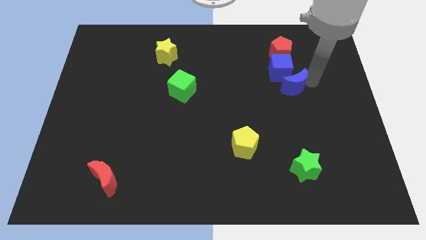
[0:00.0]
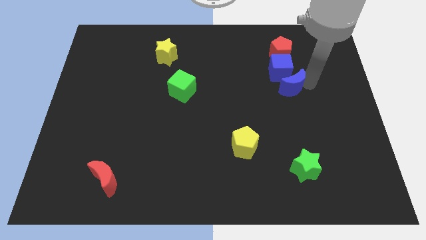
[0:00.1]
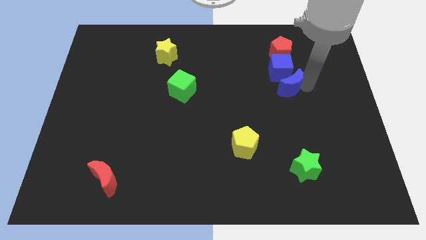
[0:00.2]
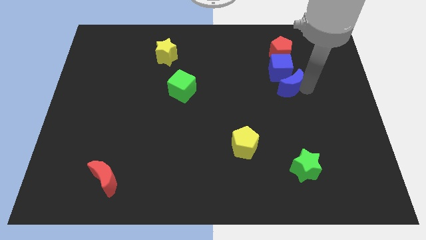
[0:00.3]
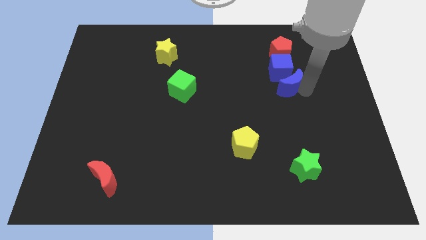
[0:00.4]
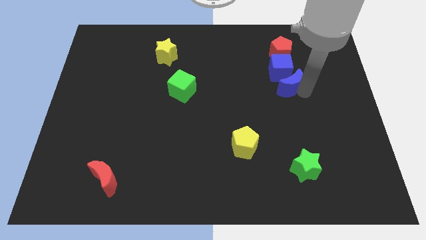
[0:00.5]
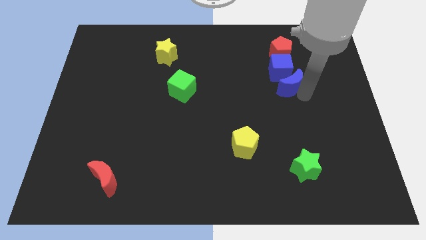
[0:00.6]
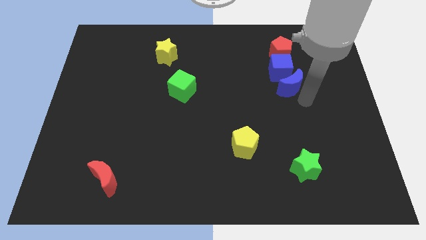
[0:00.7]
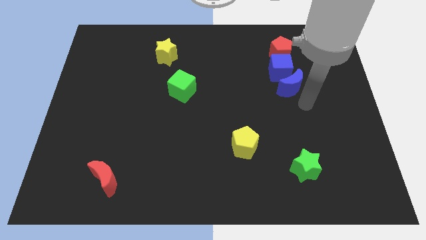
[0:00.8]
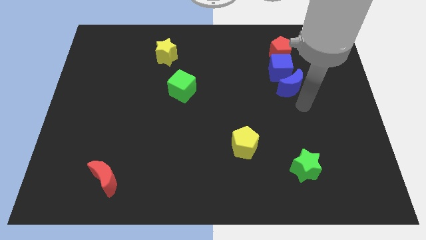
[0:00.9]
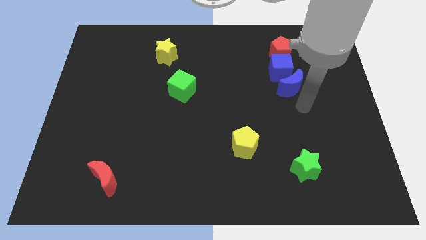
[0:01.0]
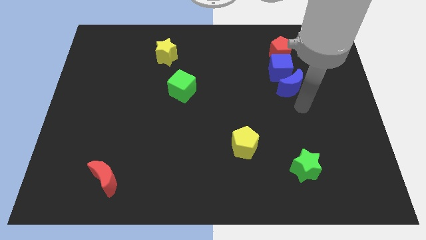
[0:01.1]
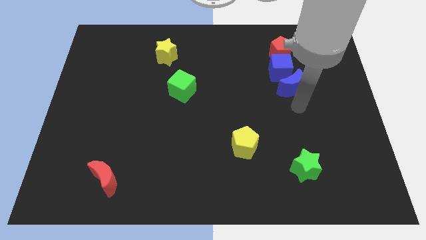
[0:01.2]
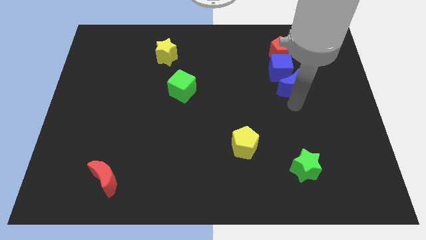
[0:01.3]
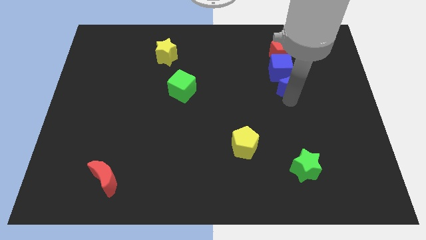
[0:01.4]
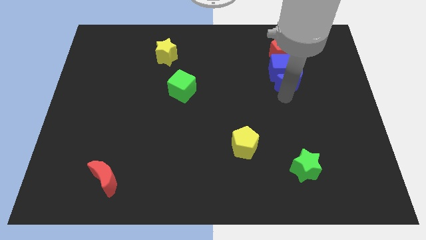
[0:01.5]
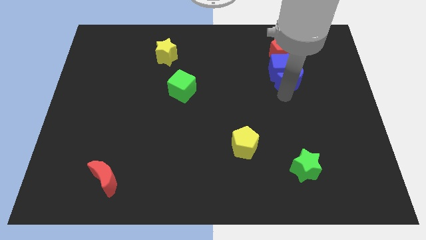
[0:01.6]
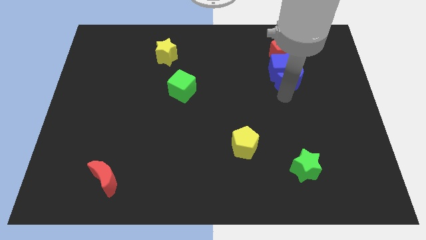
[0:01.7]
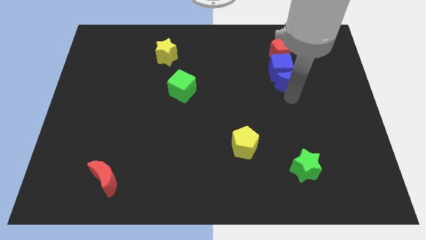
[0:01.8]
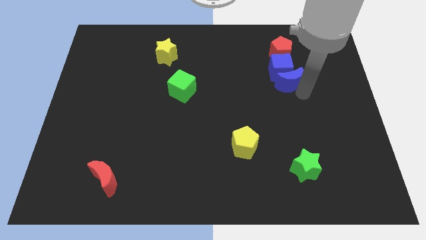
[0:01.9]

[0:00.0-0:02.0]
move the blue crescent below the blue cube

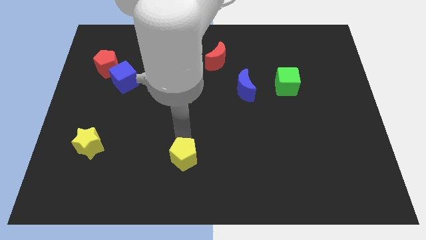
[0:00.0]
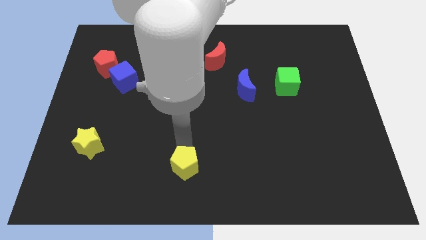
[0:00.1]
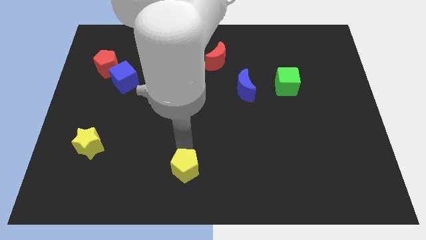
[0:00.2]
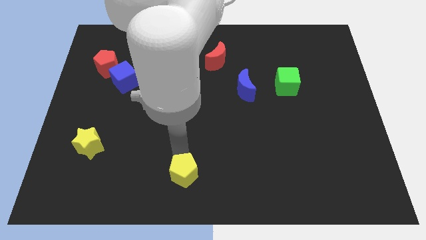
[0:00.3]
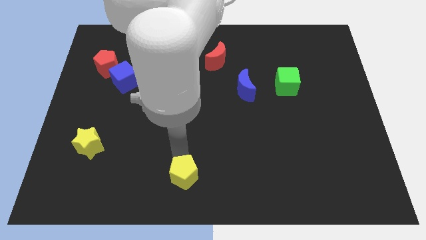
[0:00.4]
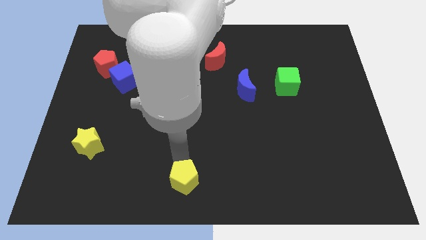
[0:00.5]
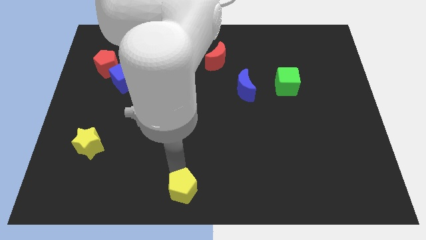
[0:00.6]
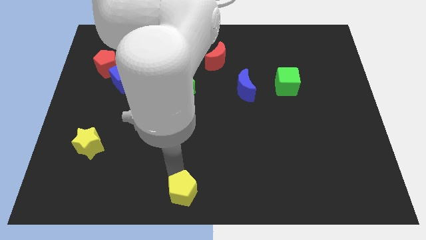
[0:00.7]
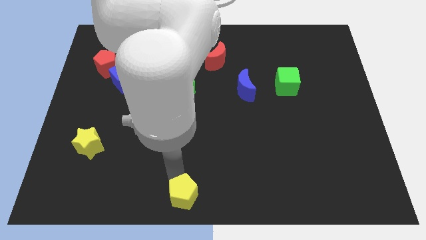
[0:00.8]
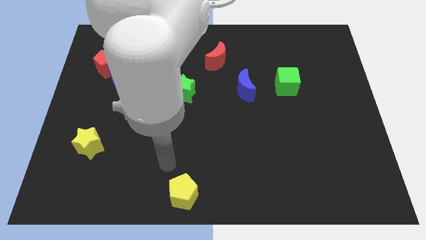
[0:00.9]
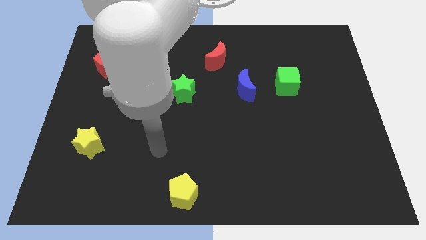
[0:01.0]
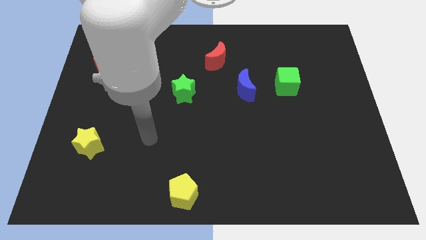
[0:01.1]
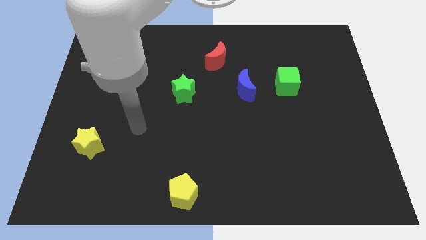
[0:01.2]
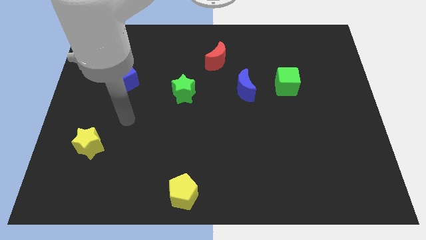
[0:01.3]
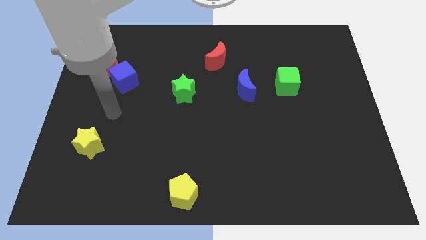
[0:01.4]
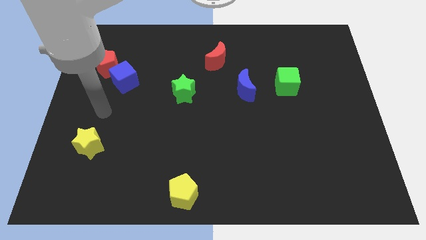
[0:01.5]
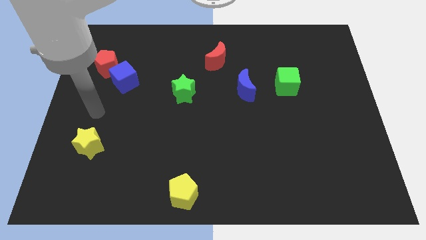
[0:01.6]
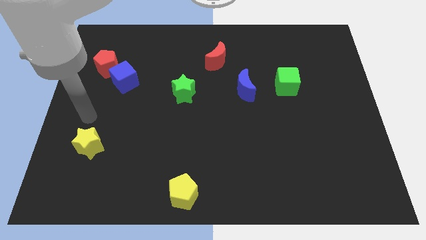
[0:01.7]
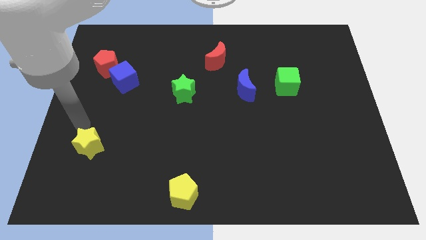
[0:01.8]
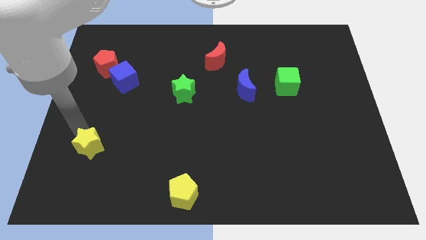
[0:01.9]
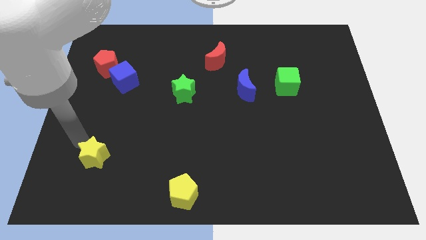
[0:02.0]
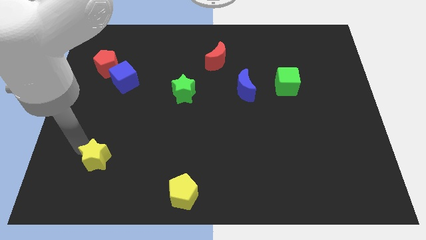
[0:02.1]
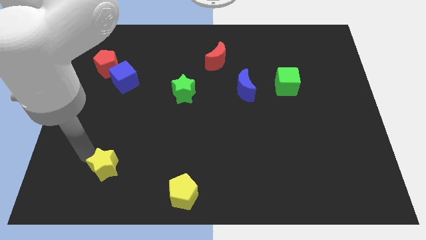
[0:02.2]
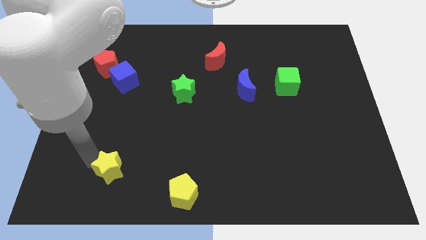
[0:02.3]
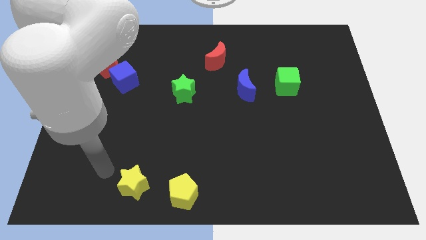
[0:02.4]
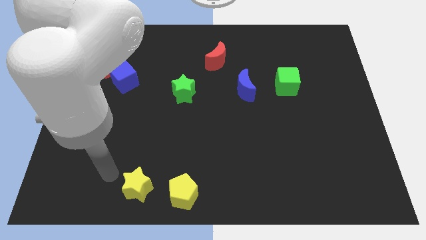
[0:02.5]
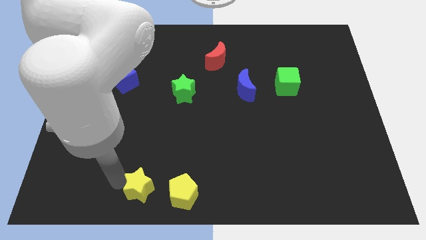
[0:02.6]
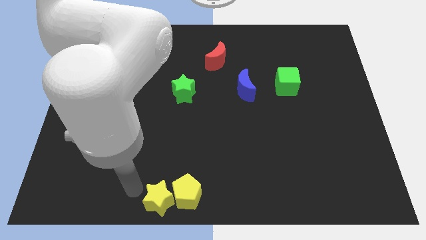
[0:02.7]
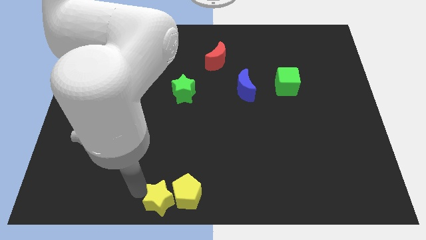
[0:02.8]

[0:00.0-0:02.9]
place the yellow pentagon and yellow star to the bottom center

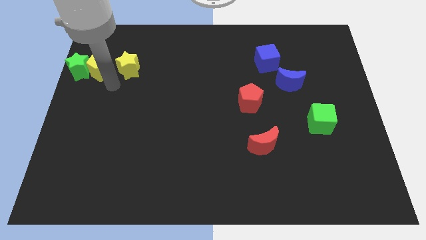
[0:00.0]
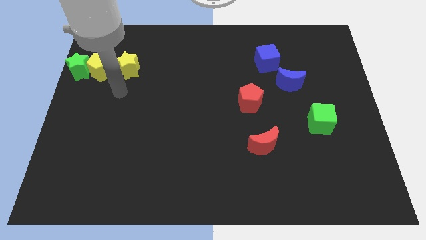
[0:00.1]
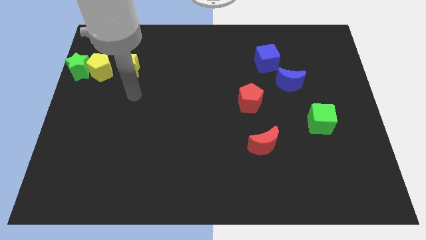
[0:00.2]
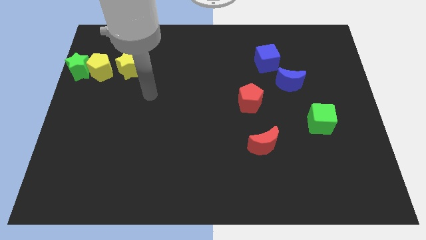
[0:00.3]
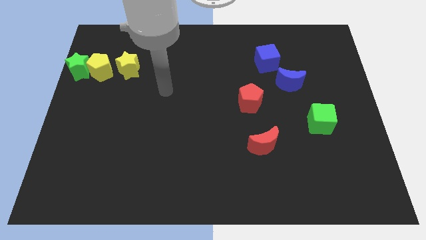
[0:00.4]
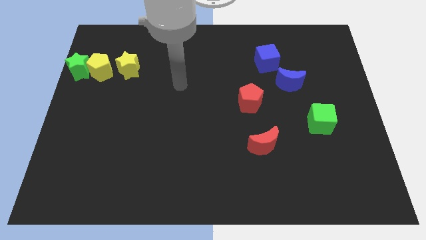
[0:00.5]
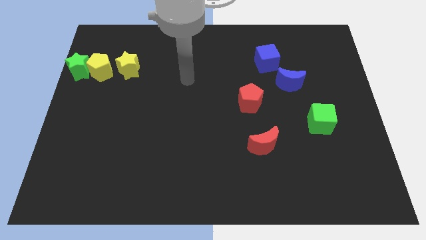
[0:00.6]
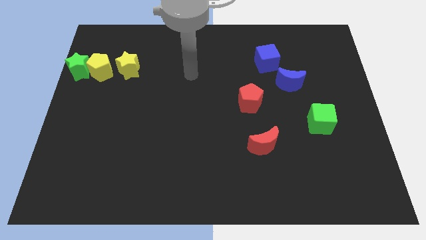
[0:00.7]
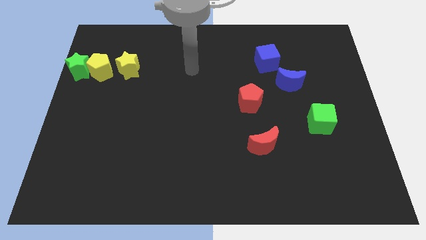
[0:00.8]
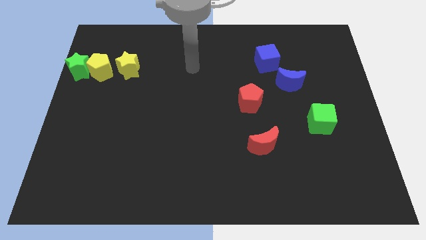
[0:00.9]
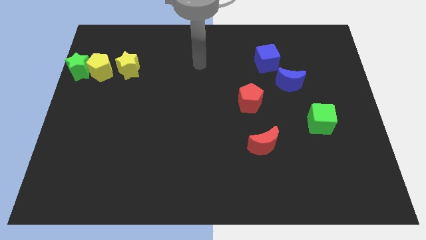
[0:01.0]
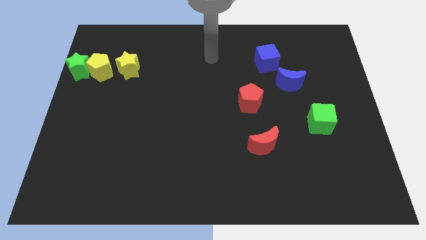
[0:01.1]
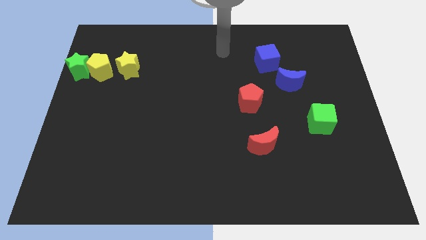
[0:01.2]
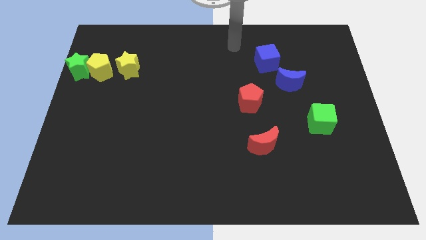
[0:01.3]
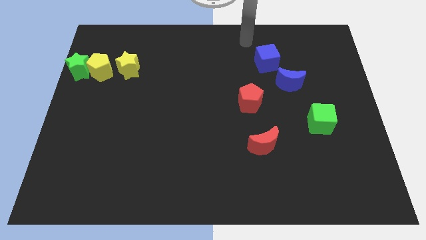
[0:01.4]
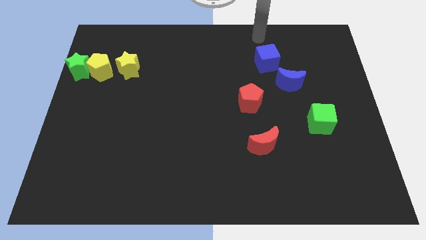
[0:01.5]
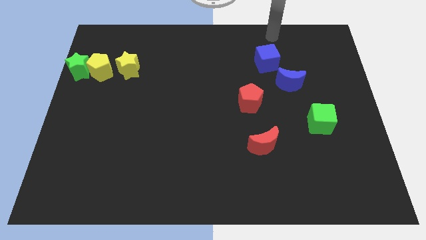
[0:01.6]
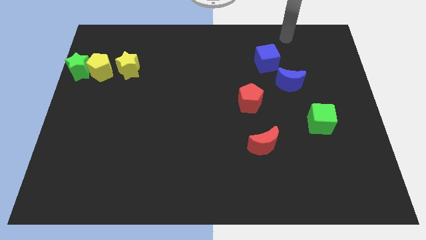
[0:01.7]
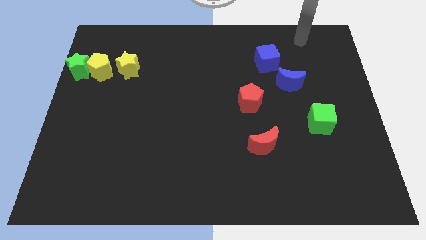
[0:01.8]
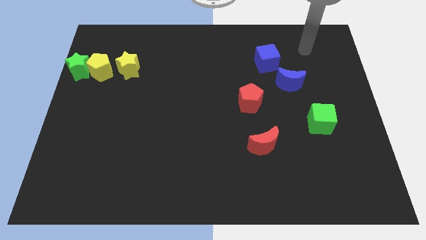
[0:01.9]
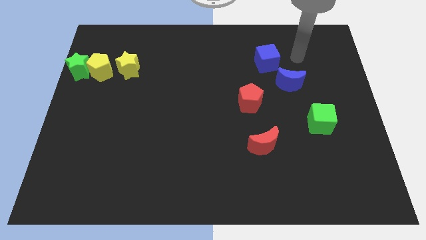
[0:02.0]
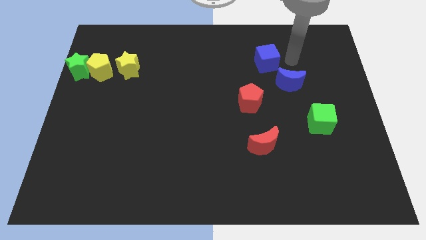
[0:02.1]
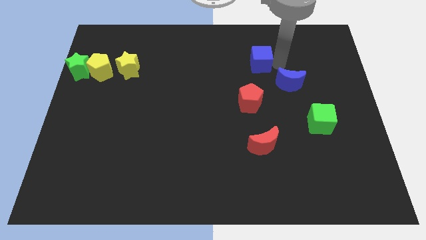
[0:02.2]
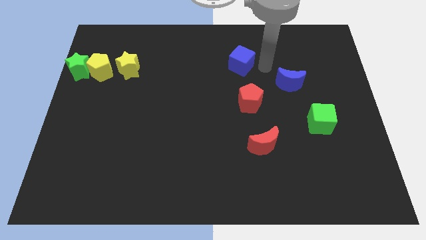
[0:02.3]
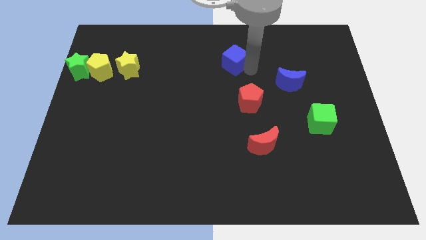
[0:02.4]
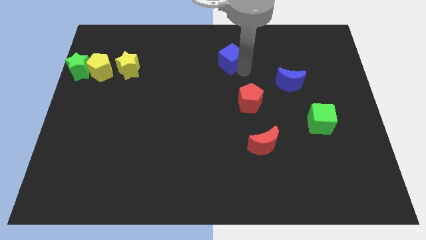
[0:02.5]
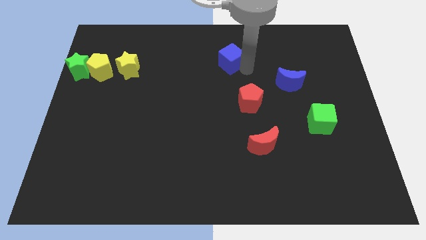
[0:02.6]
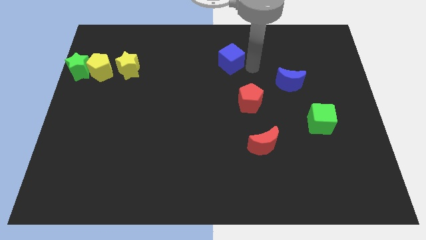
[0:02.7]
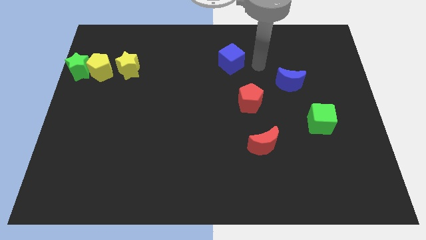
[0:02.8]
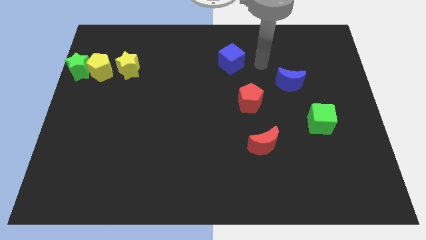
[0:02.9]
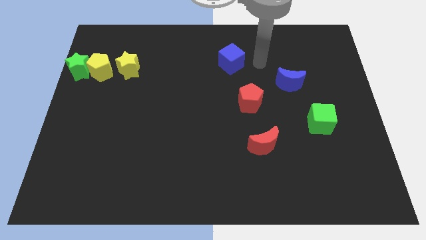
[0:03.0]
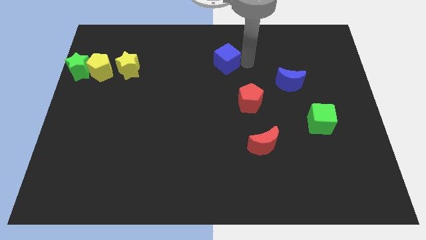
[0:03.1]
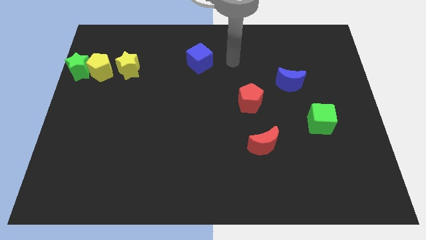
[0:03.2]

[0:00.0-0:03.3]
move the blue cube slightly left

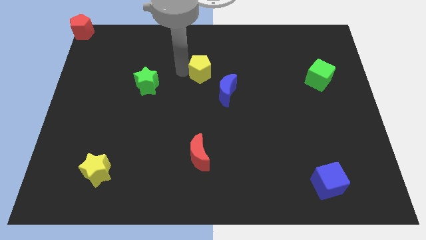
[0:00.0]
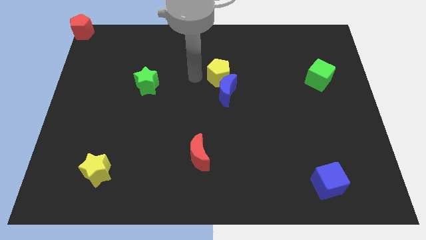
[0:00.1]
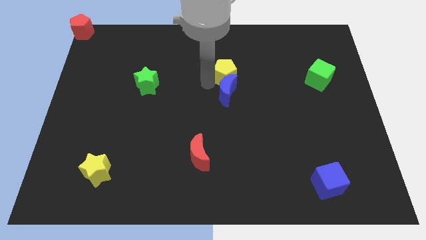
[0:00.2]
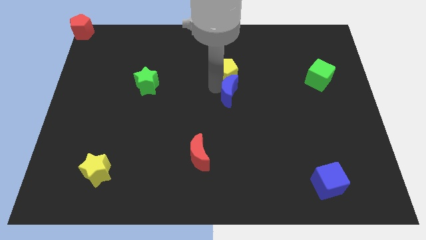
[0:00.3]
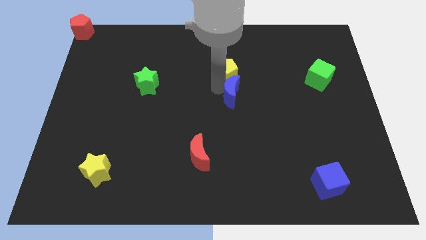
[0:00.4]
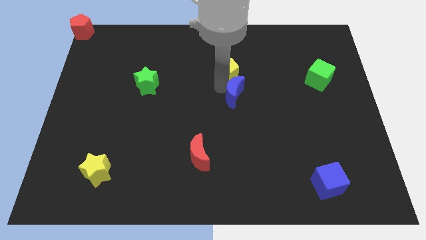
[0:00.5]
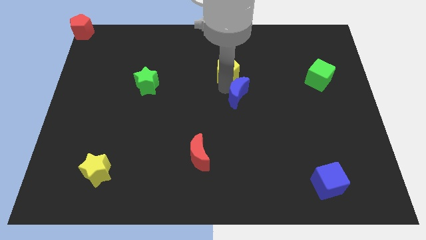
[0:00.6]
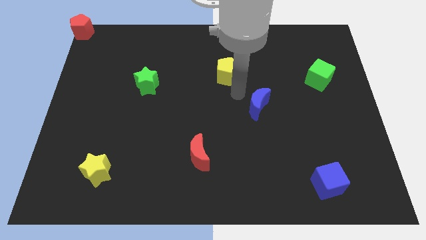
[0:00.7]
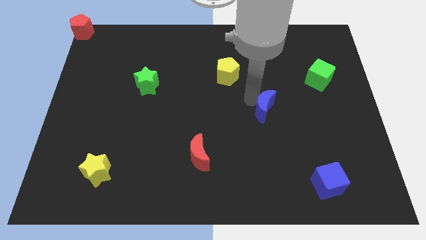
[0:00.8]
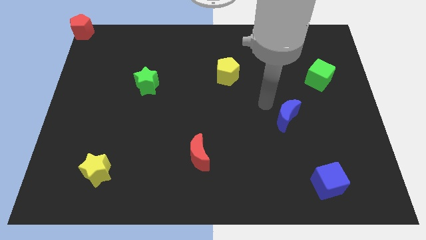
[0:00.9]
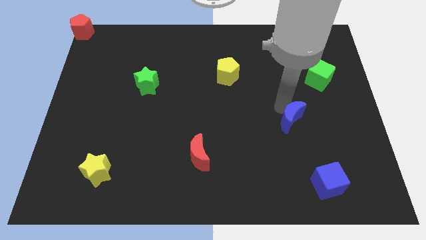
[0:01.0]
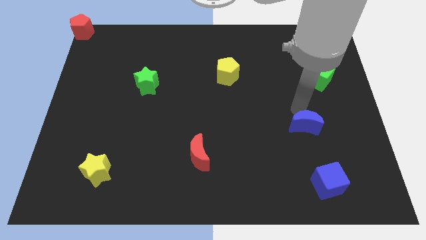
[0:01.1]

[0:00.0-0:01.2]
move the blue crescent towards right
